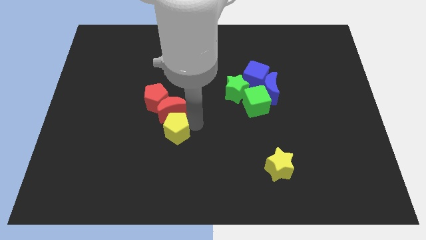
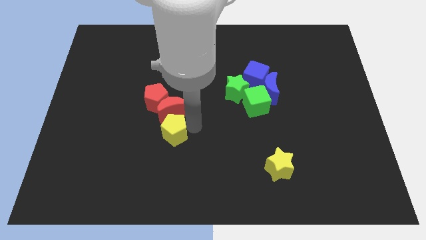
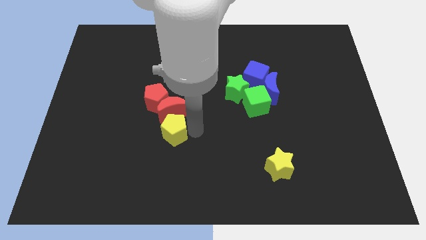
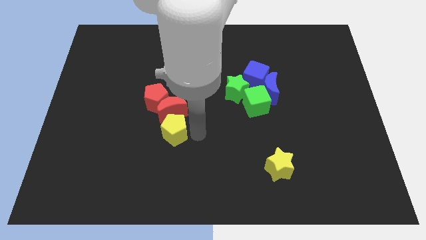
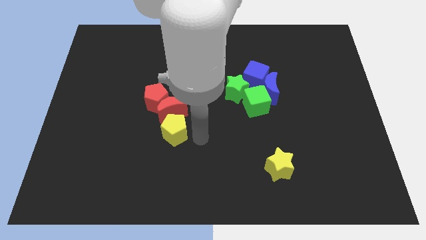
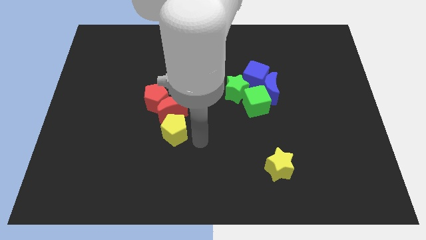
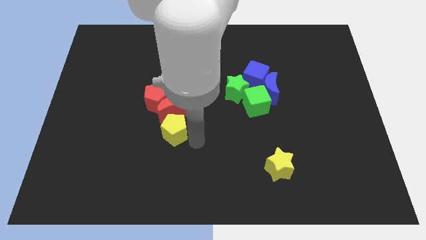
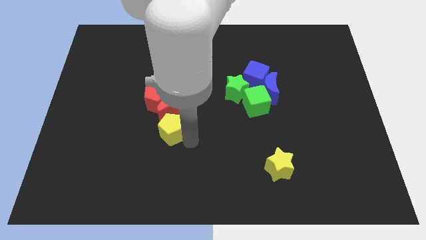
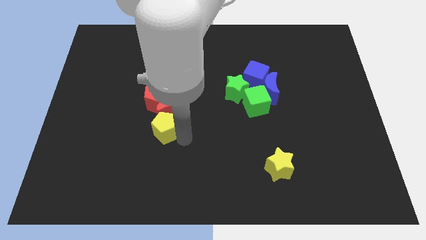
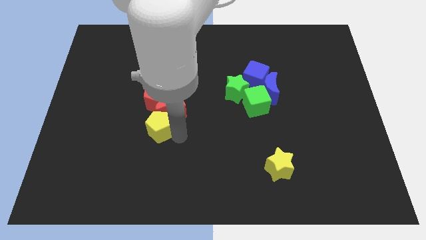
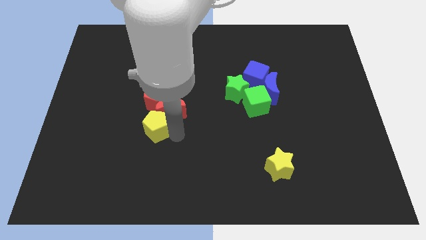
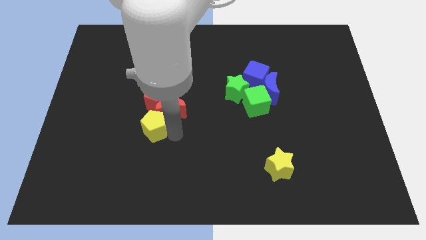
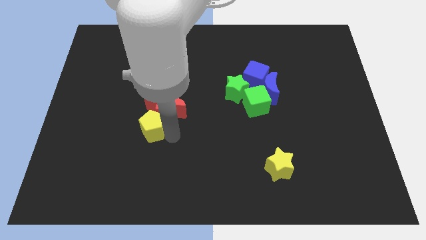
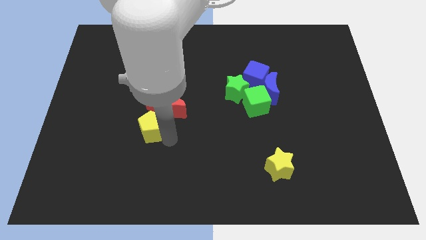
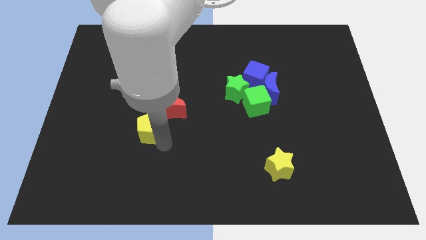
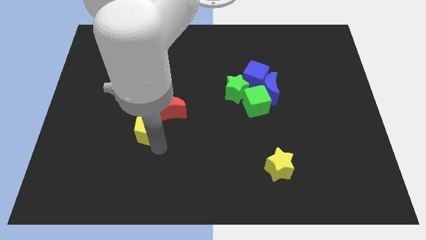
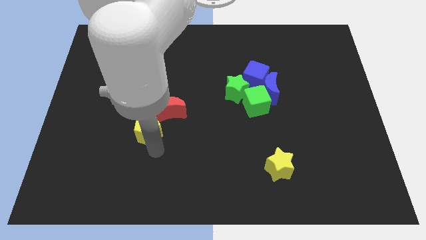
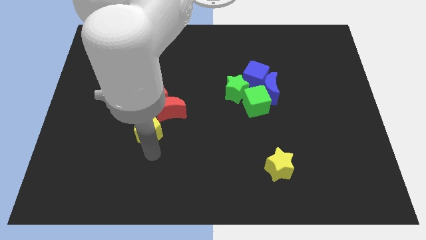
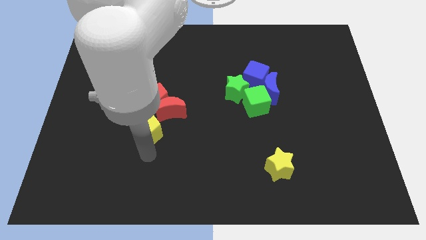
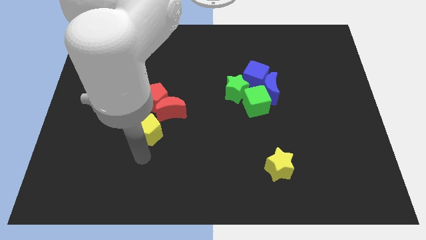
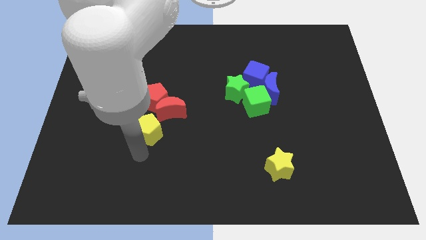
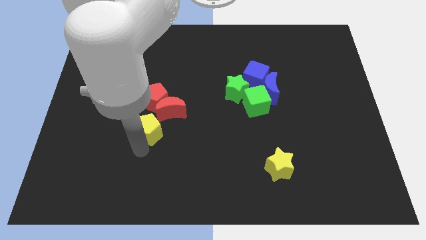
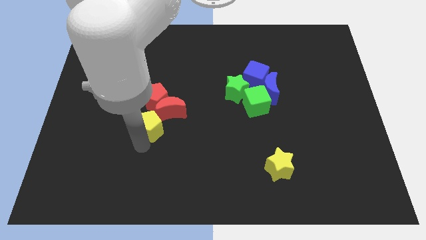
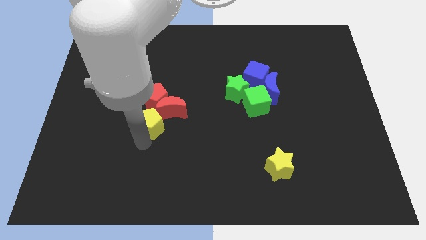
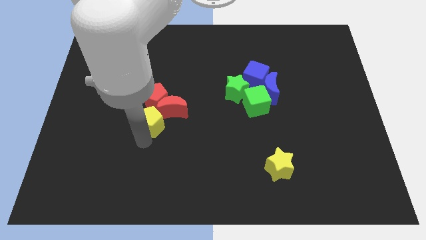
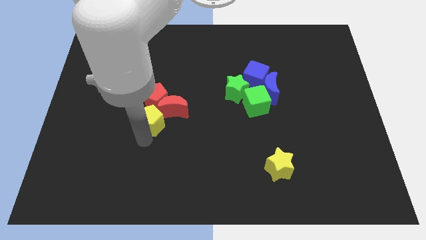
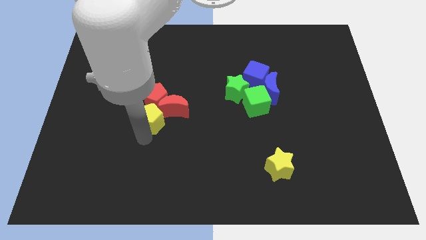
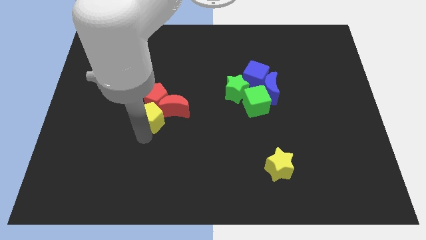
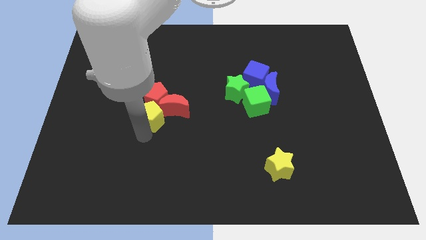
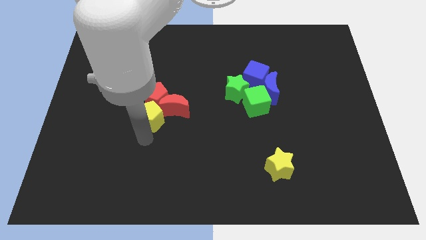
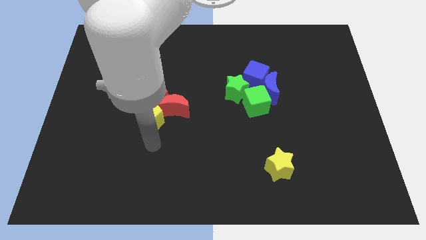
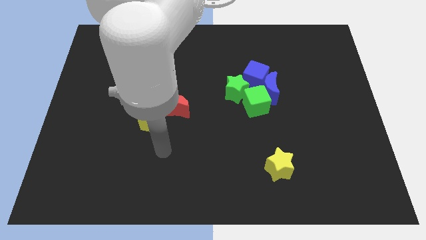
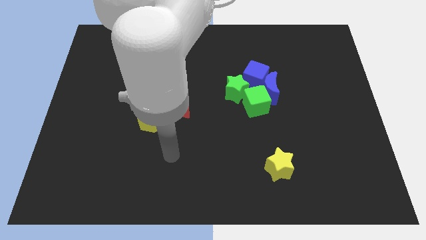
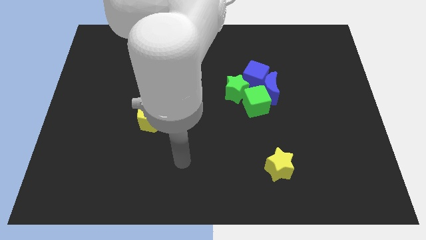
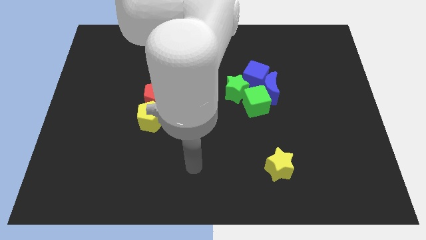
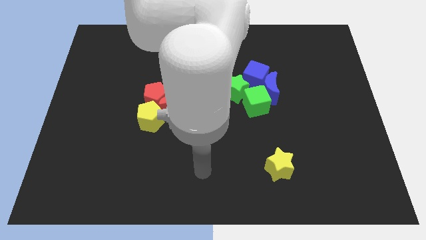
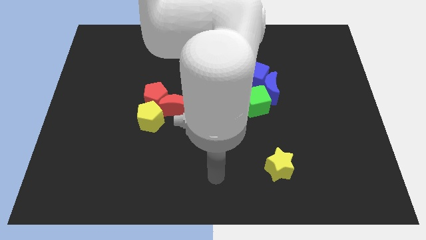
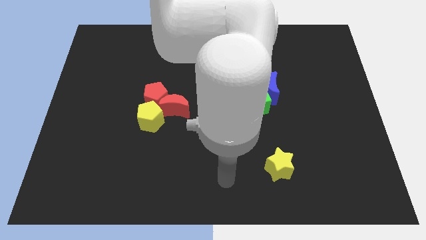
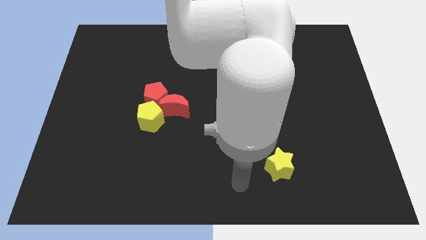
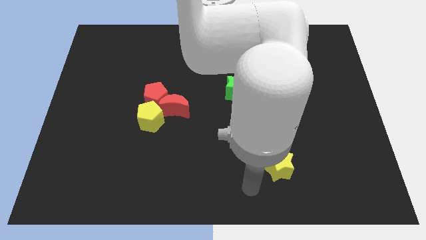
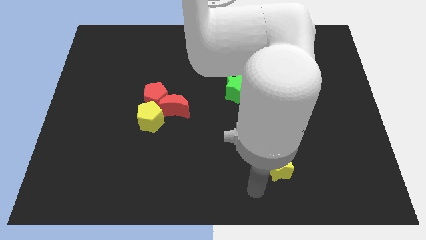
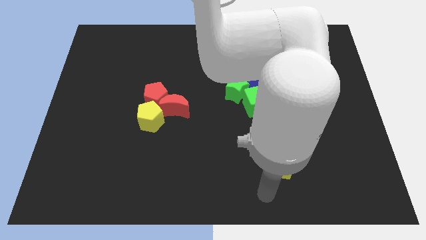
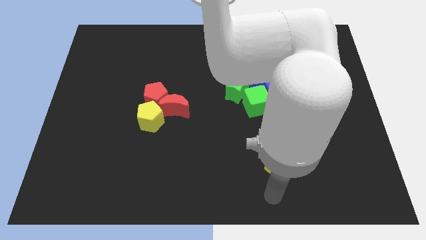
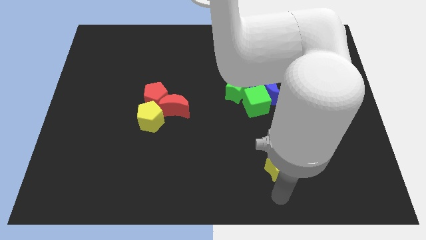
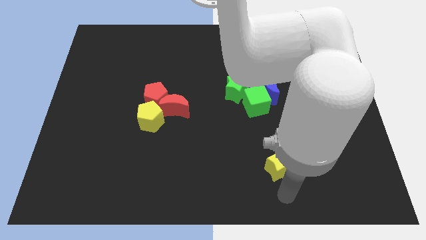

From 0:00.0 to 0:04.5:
move your arm towards the bottom side of the yellow star

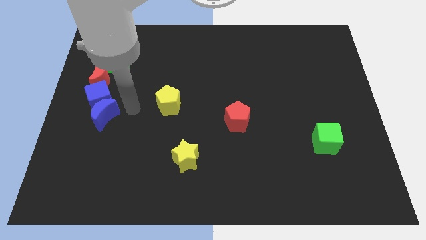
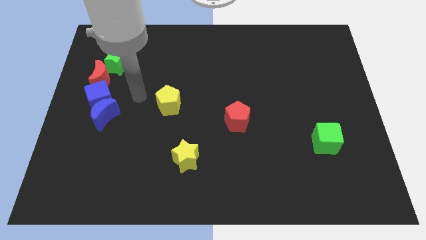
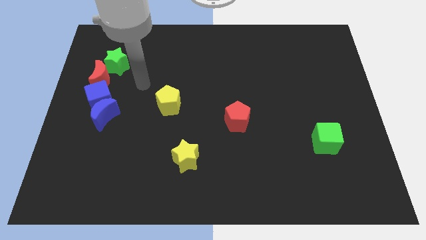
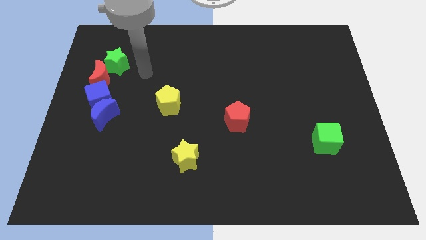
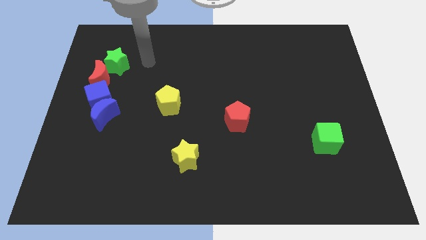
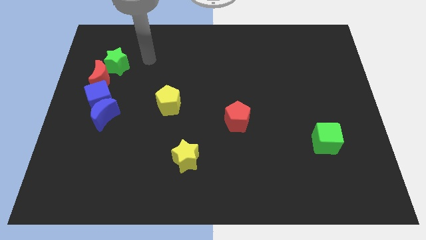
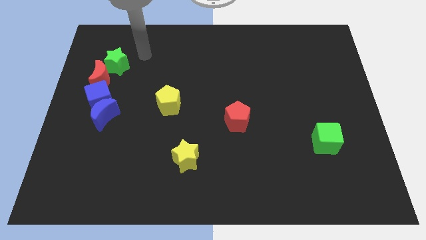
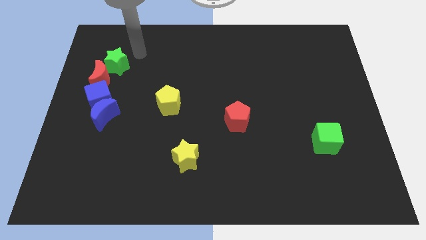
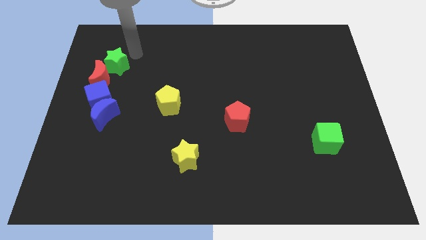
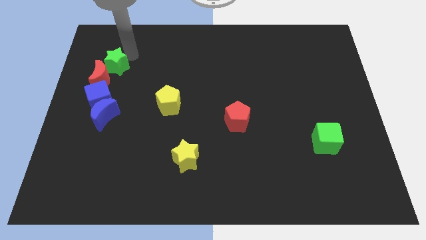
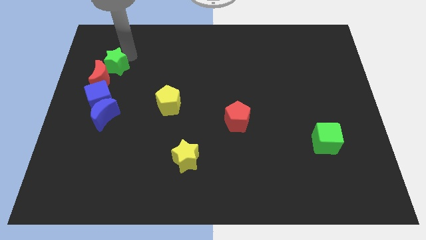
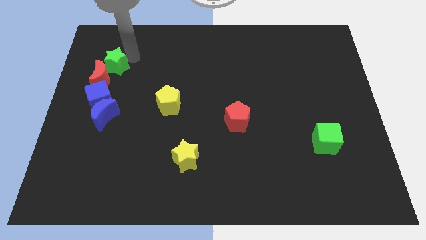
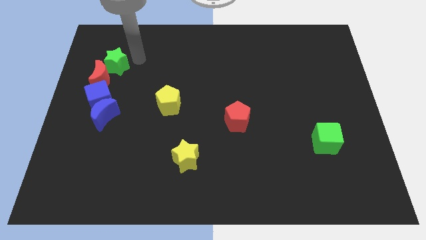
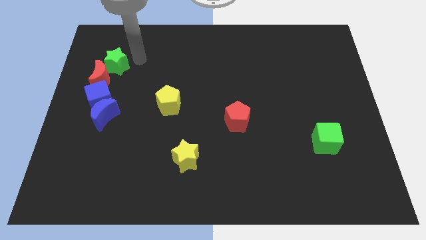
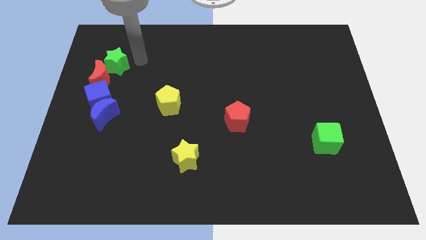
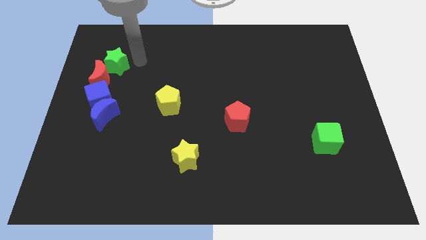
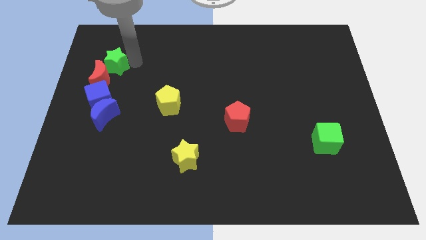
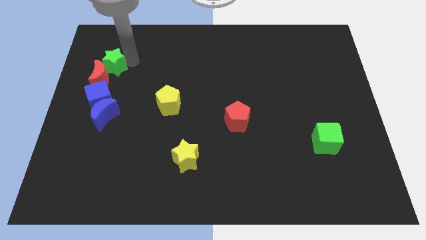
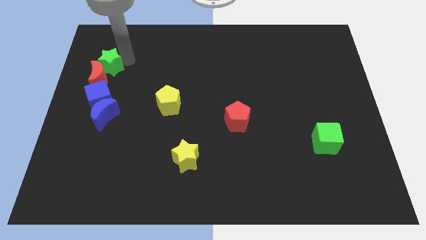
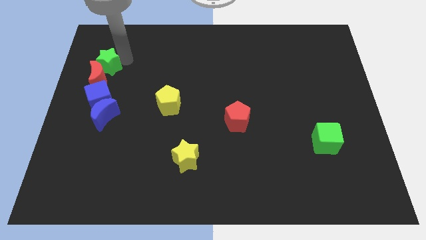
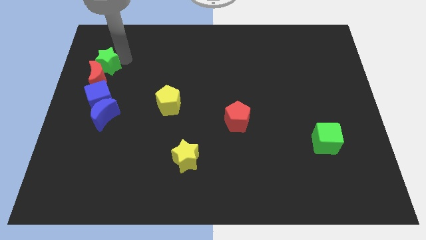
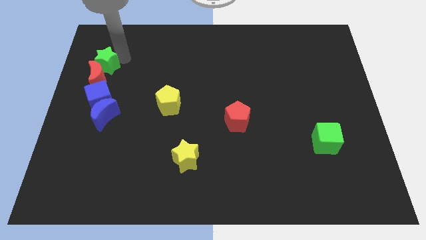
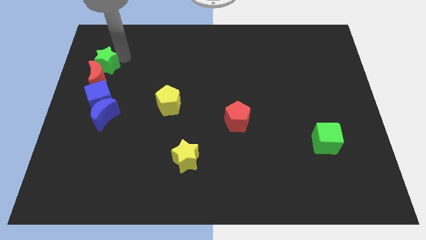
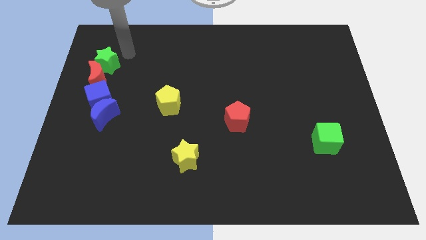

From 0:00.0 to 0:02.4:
move the green star slightly to the left

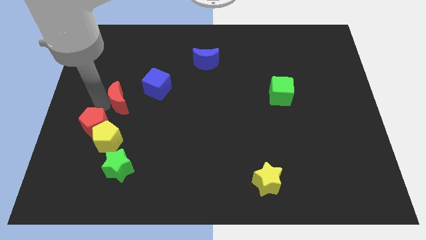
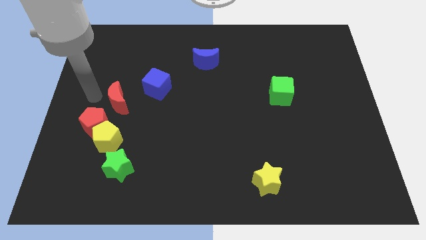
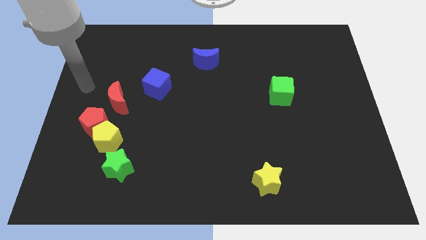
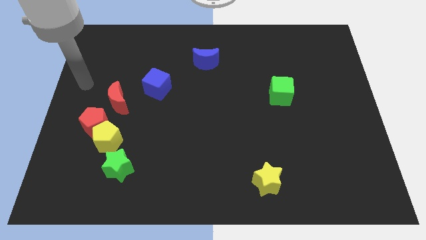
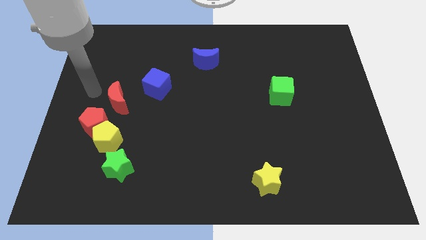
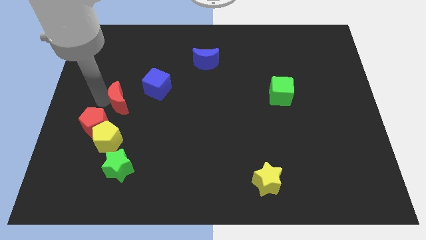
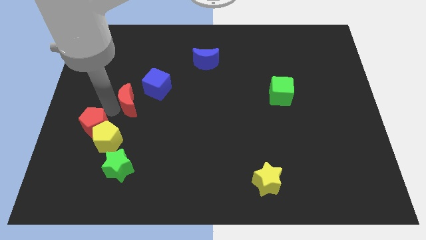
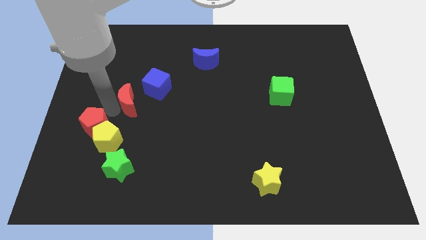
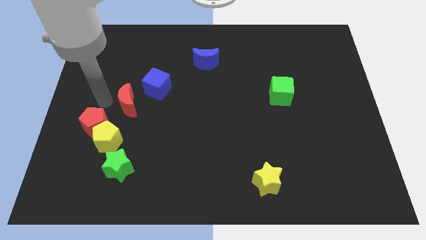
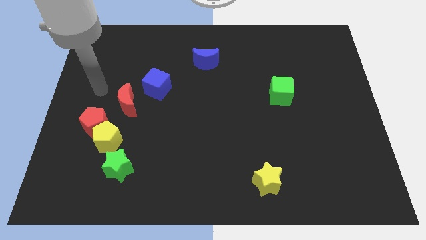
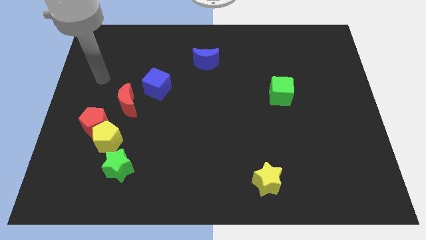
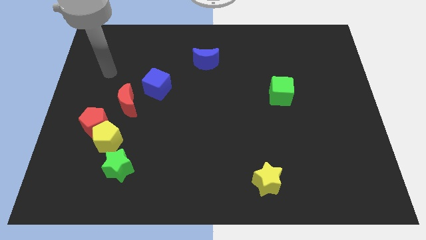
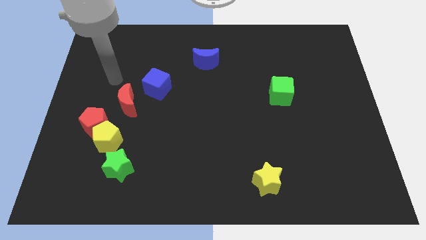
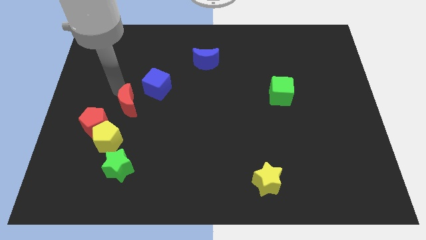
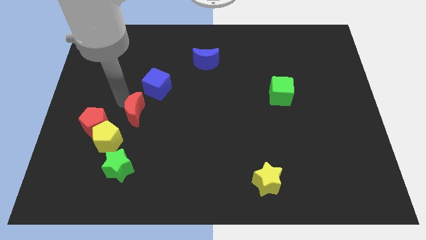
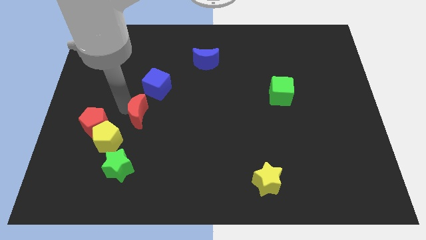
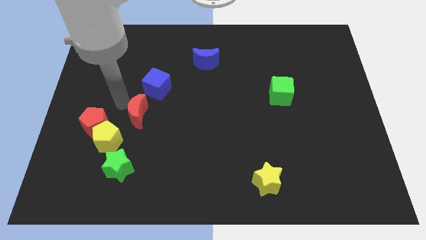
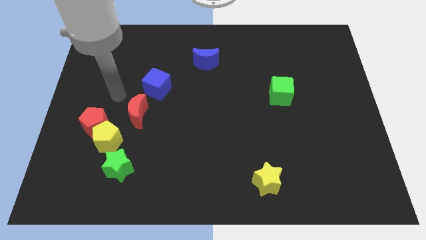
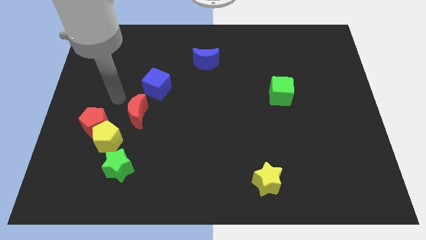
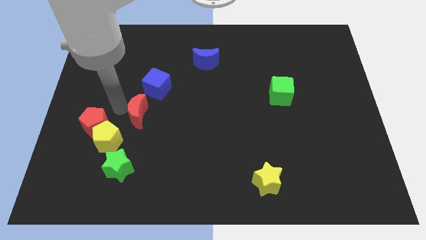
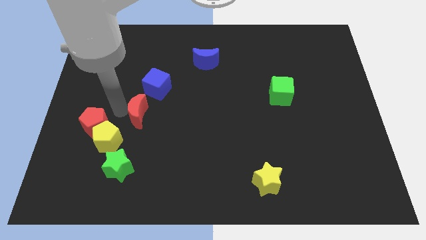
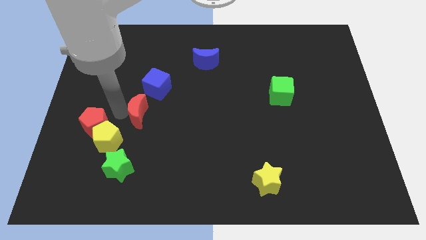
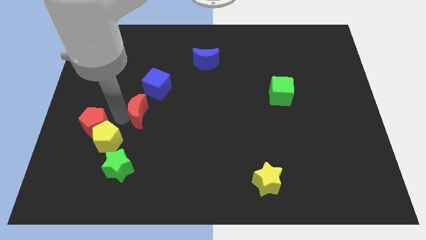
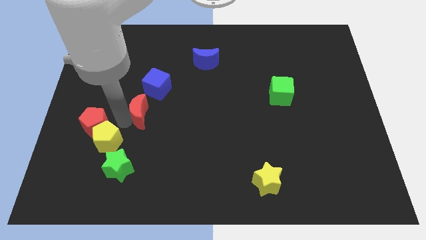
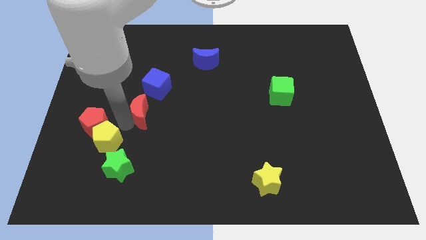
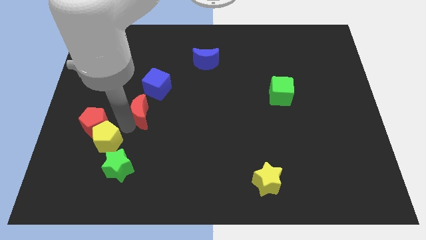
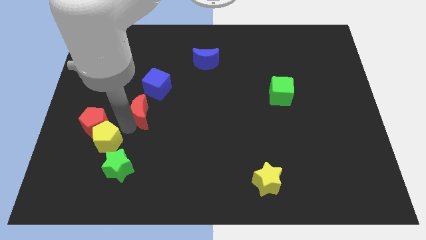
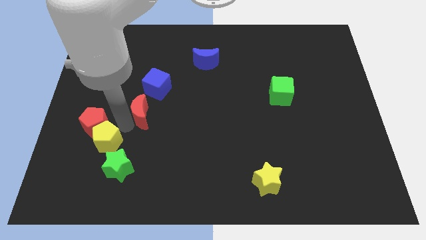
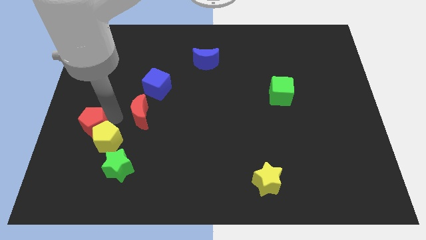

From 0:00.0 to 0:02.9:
separate the red moon and red pentagon
